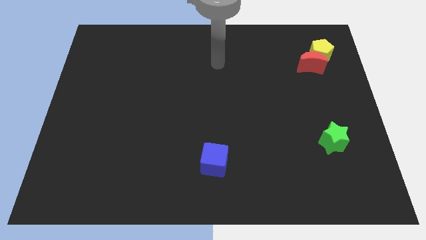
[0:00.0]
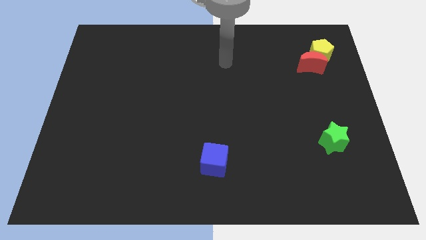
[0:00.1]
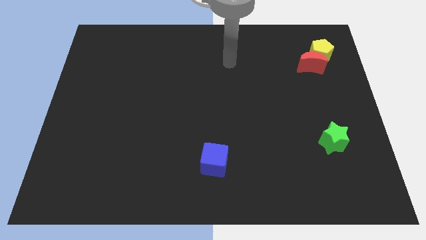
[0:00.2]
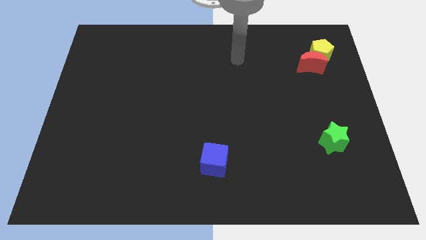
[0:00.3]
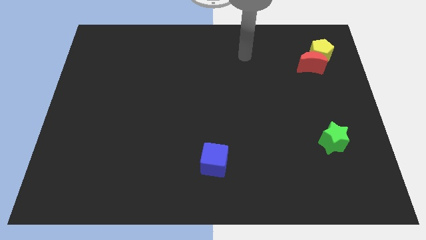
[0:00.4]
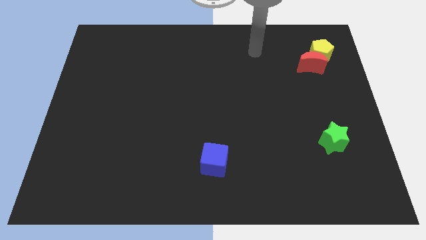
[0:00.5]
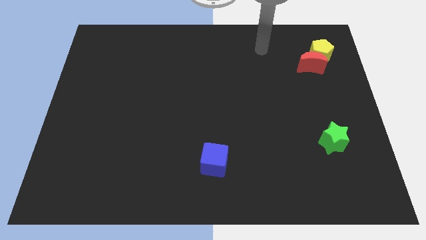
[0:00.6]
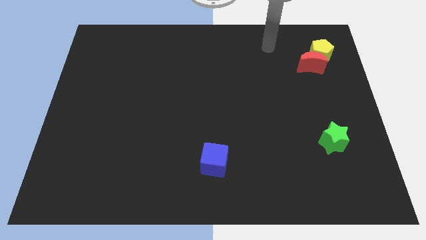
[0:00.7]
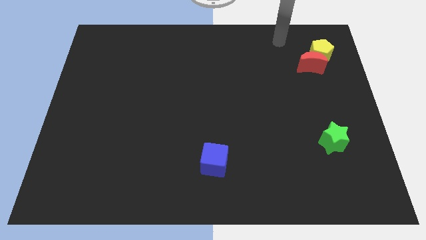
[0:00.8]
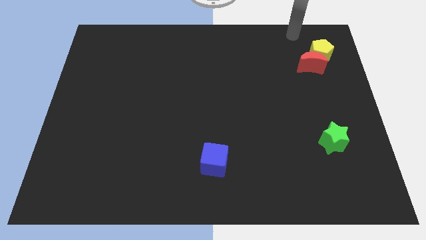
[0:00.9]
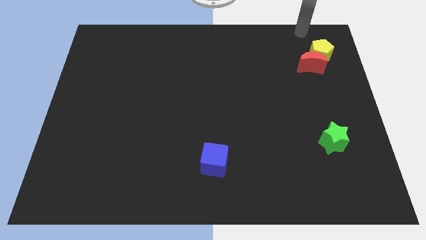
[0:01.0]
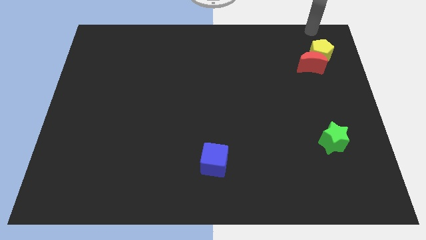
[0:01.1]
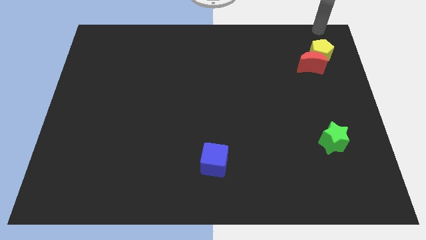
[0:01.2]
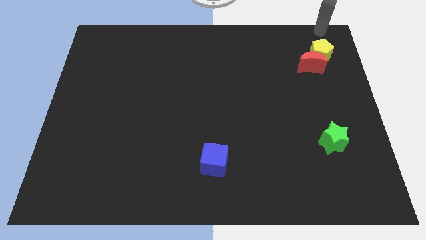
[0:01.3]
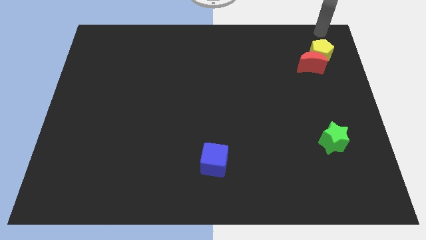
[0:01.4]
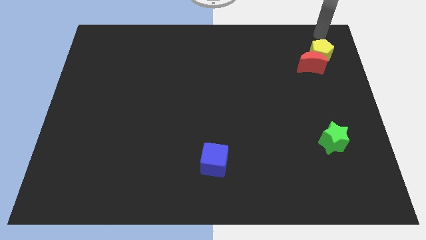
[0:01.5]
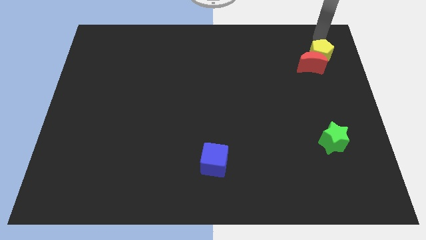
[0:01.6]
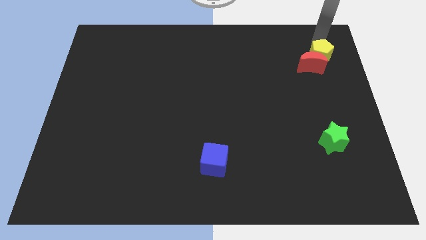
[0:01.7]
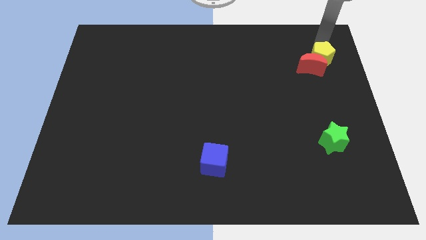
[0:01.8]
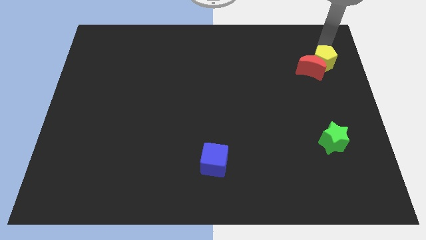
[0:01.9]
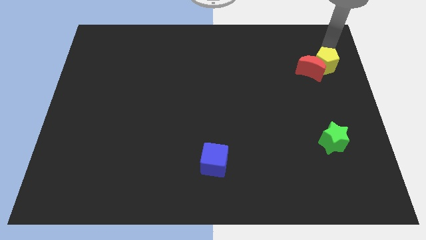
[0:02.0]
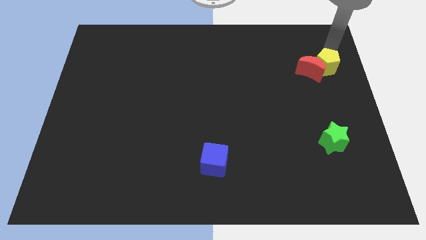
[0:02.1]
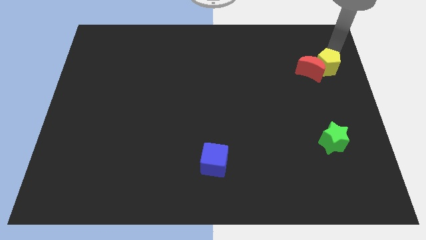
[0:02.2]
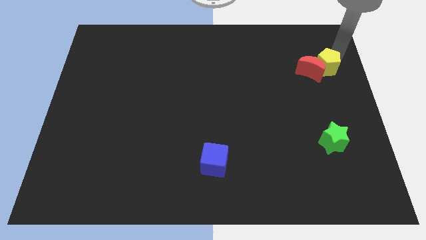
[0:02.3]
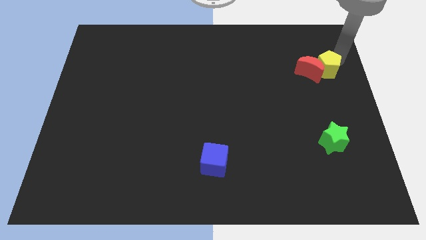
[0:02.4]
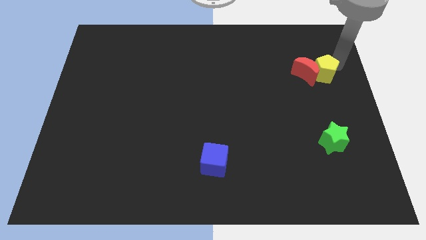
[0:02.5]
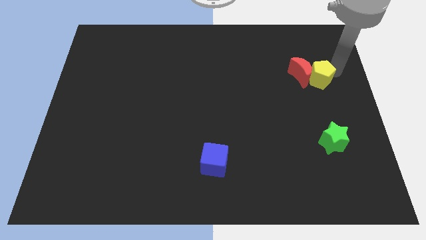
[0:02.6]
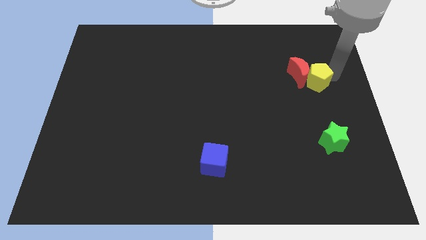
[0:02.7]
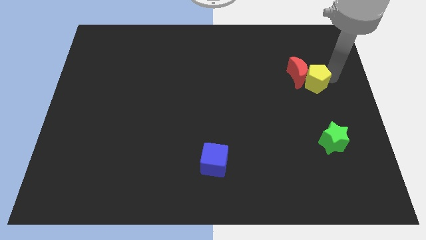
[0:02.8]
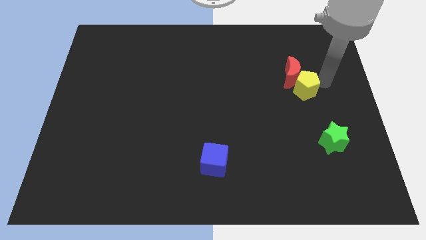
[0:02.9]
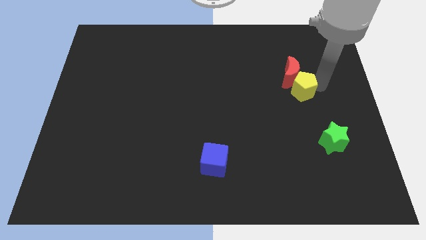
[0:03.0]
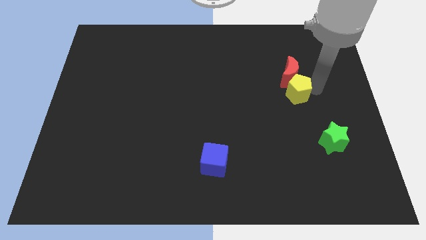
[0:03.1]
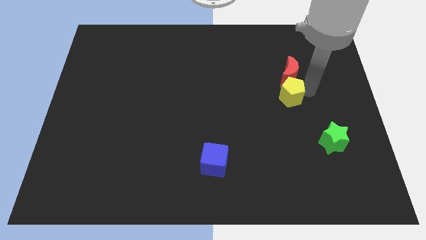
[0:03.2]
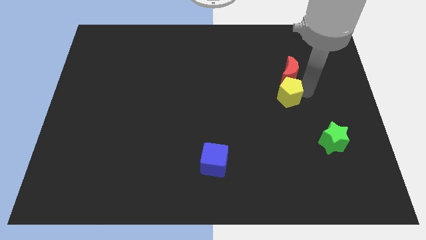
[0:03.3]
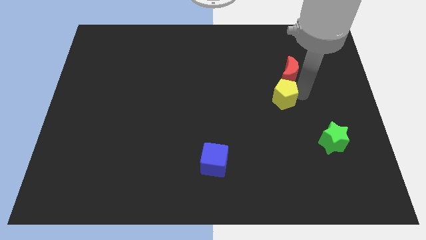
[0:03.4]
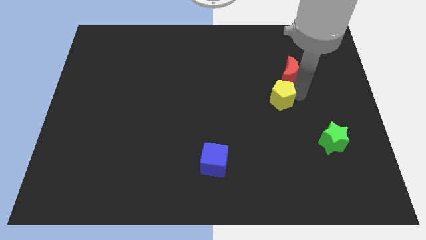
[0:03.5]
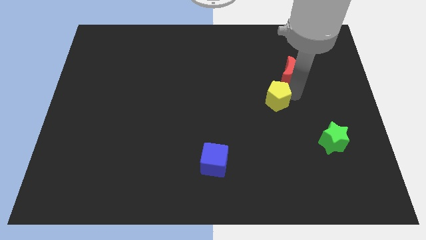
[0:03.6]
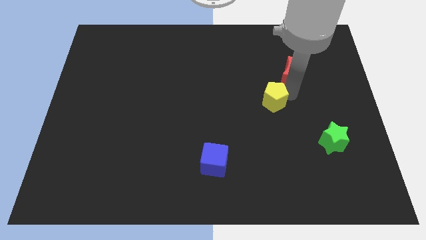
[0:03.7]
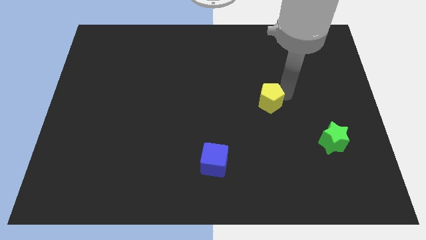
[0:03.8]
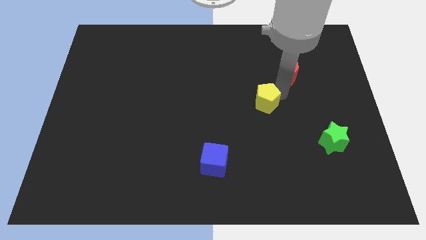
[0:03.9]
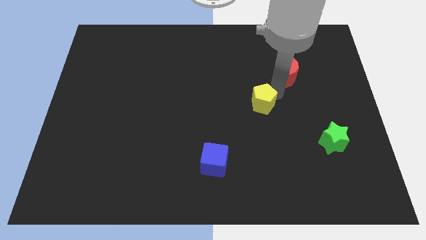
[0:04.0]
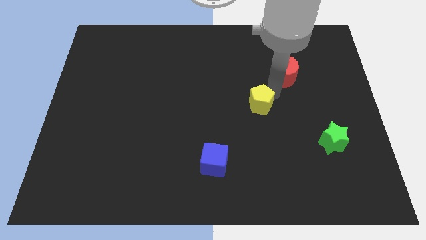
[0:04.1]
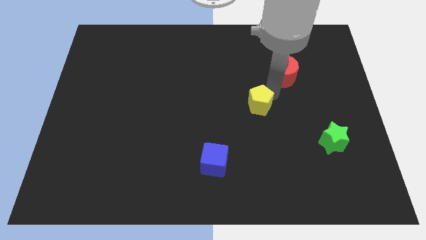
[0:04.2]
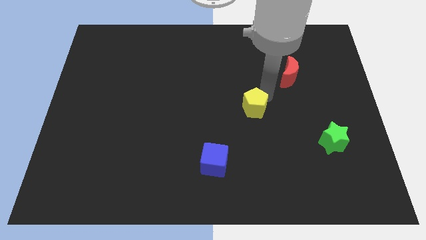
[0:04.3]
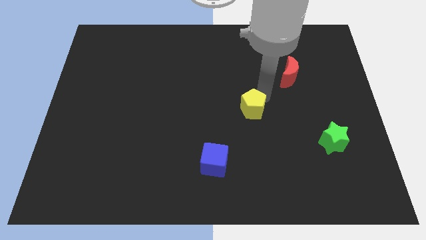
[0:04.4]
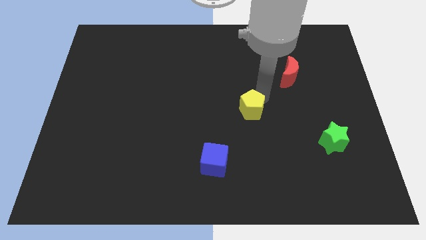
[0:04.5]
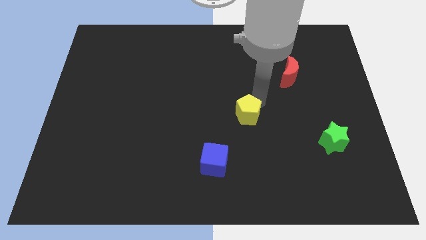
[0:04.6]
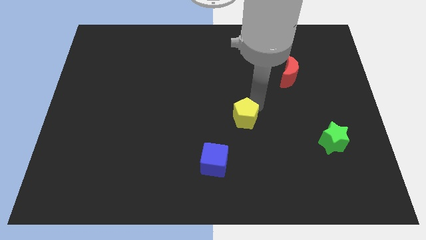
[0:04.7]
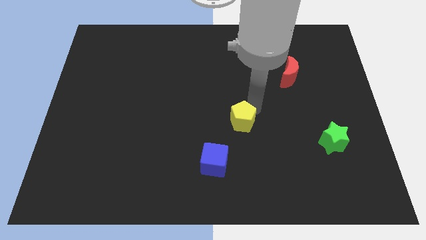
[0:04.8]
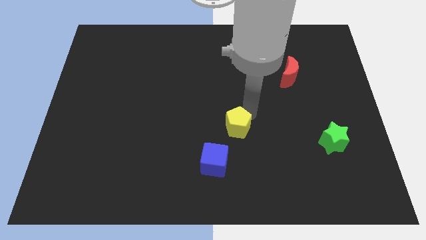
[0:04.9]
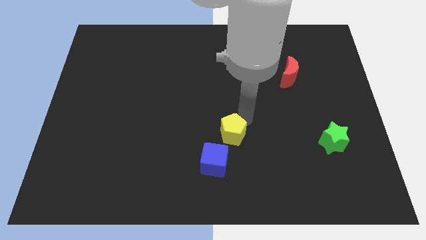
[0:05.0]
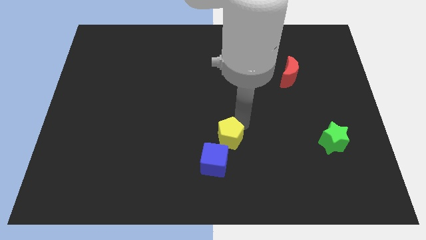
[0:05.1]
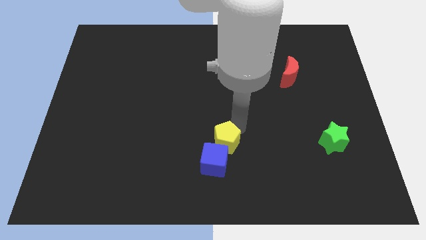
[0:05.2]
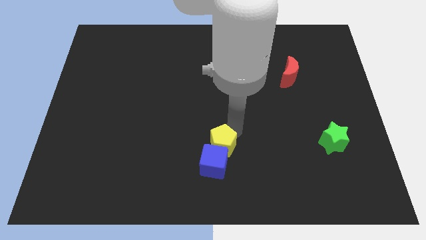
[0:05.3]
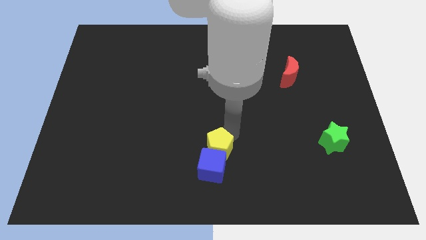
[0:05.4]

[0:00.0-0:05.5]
slide the yellow pentagon towards the cube

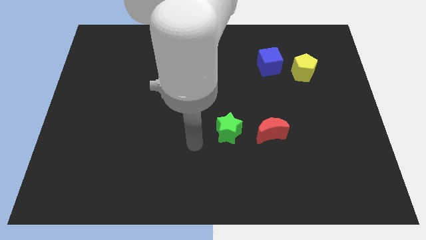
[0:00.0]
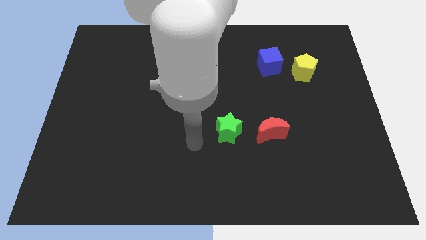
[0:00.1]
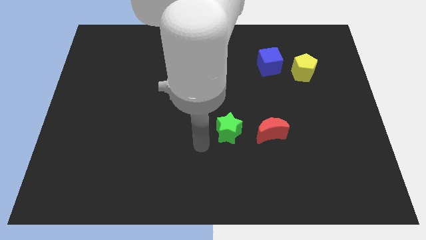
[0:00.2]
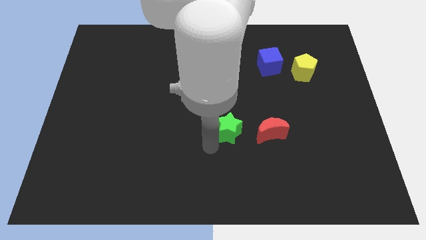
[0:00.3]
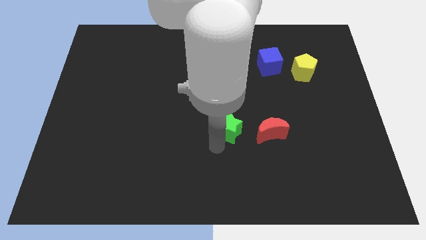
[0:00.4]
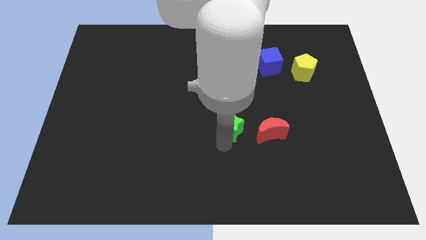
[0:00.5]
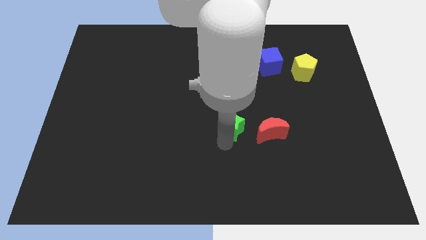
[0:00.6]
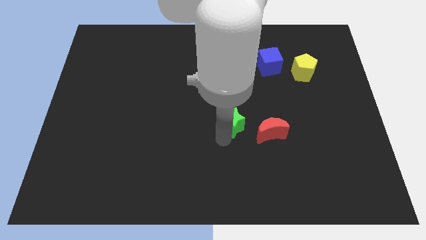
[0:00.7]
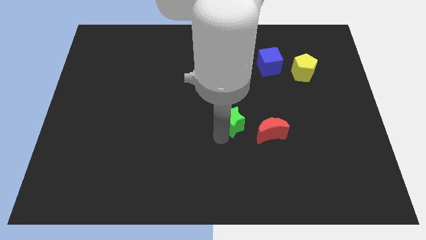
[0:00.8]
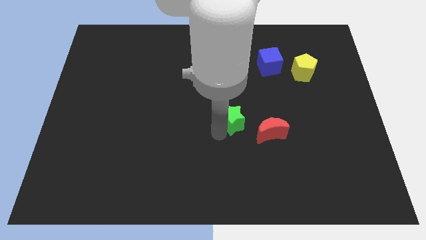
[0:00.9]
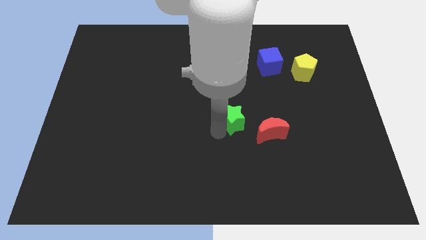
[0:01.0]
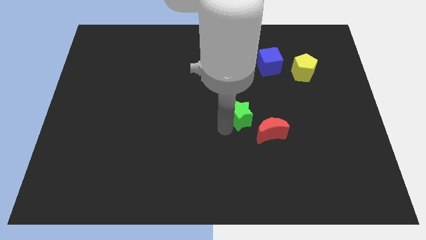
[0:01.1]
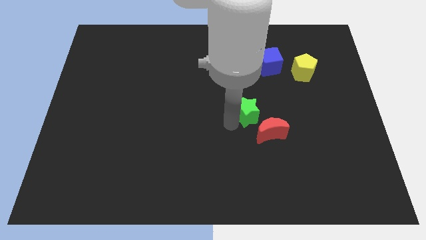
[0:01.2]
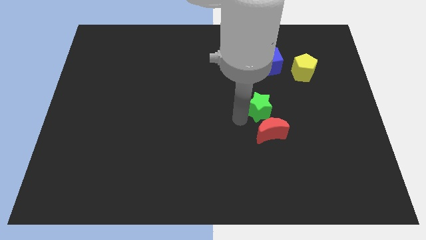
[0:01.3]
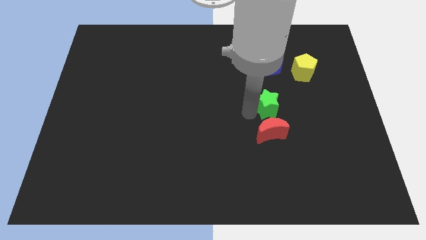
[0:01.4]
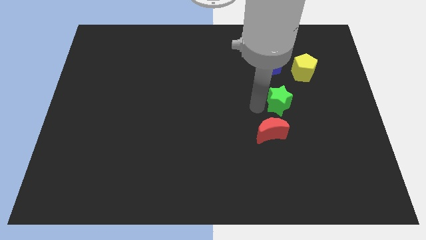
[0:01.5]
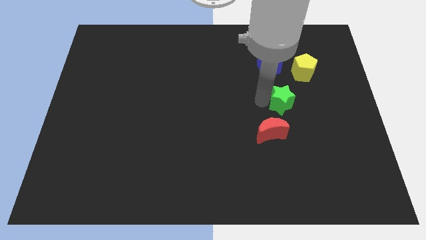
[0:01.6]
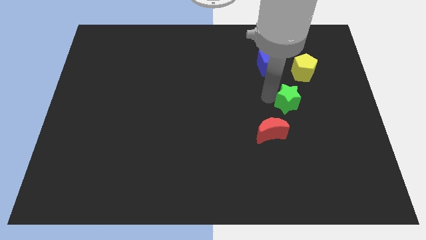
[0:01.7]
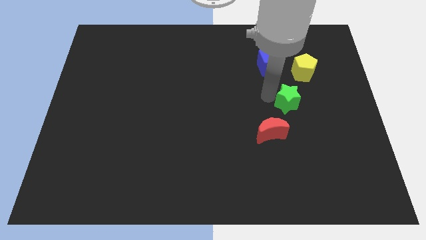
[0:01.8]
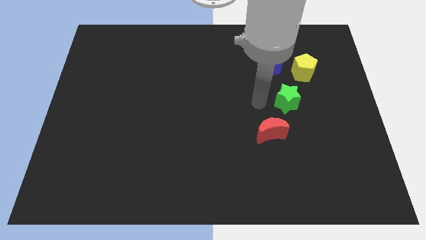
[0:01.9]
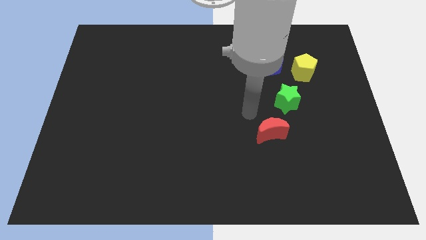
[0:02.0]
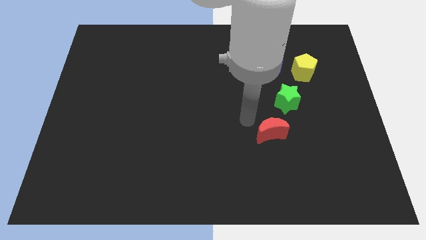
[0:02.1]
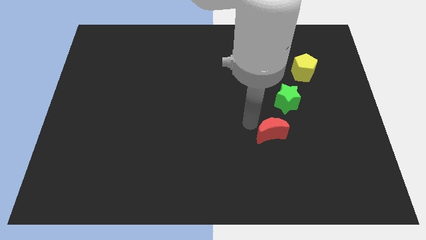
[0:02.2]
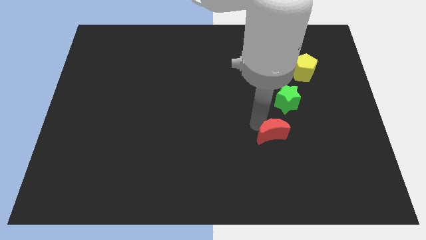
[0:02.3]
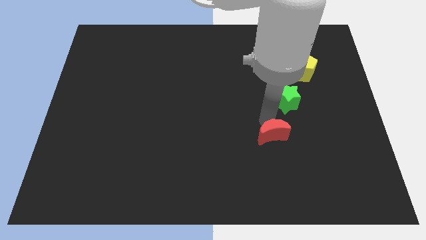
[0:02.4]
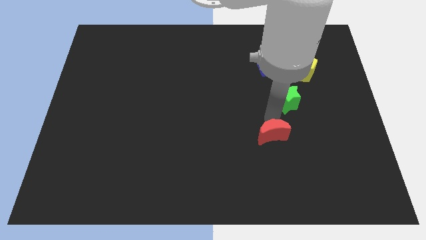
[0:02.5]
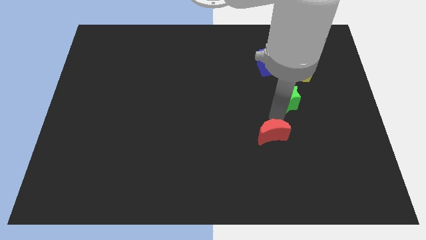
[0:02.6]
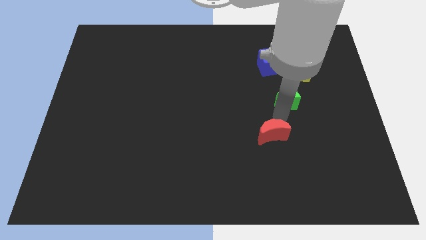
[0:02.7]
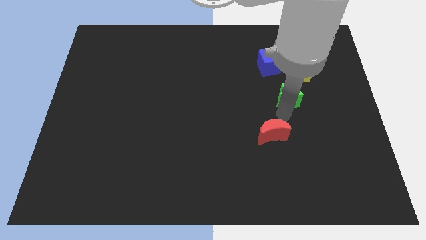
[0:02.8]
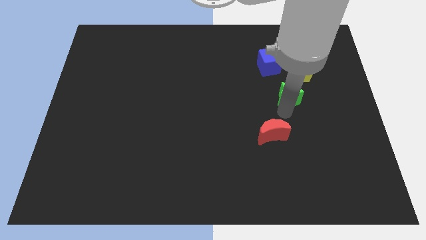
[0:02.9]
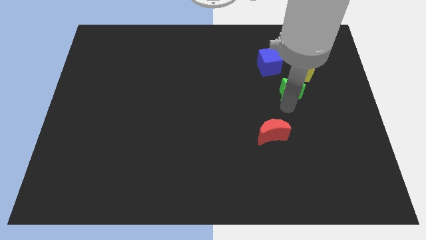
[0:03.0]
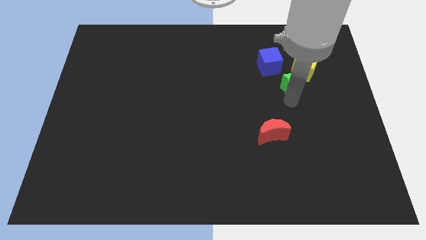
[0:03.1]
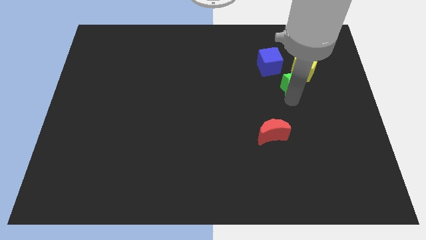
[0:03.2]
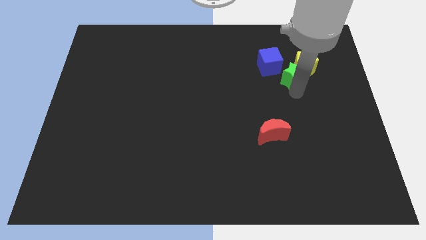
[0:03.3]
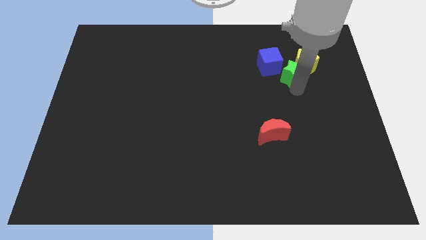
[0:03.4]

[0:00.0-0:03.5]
push the green block next to the yellow pentagon
